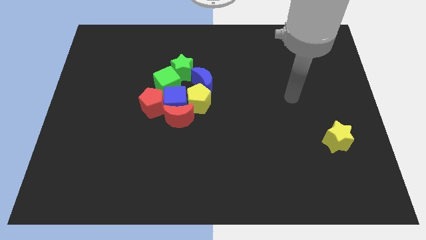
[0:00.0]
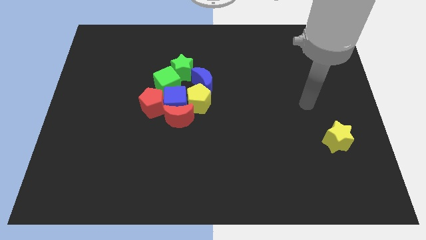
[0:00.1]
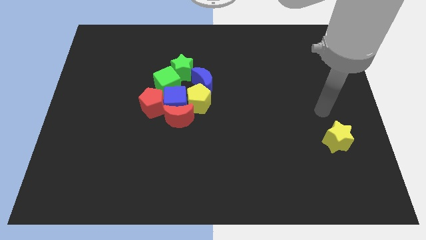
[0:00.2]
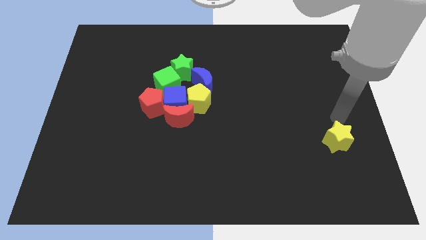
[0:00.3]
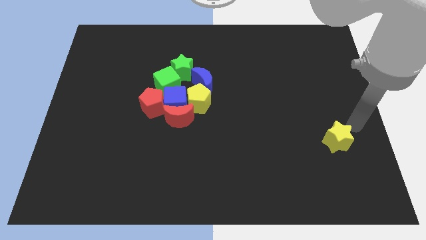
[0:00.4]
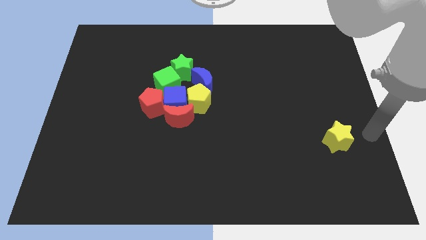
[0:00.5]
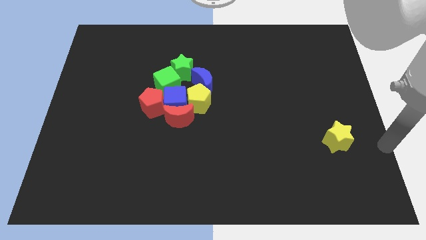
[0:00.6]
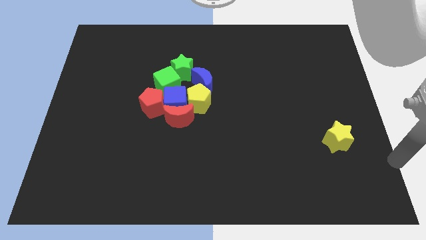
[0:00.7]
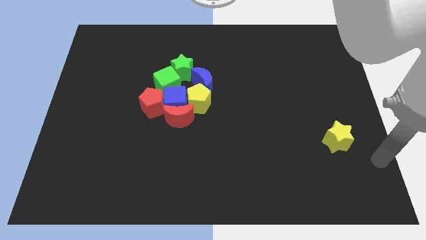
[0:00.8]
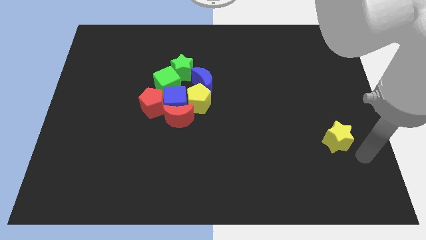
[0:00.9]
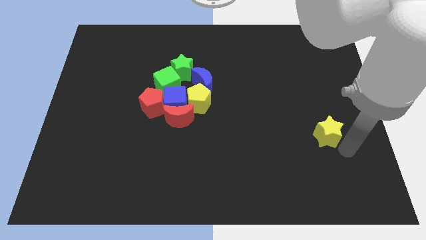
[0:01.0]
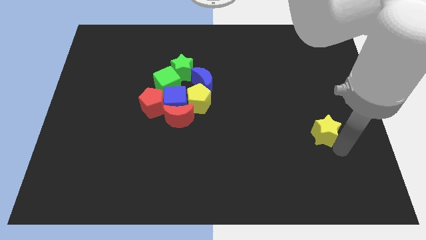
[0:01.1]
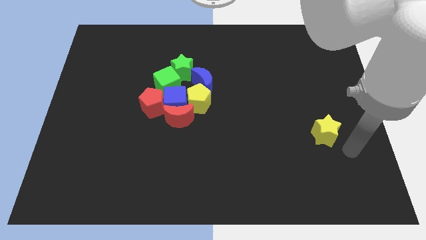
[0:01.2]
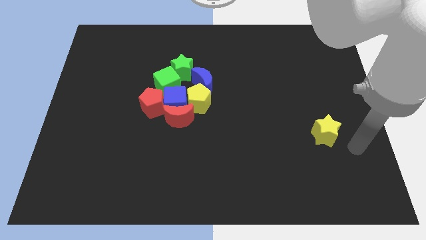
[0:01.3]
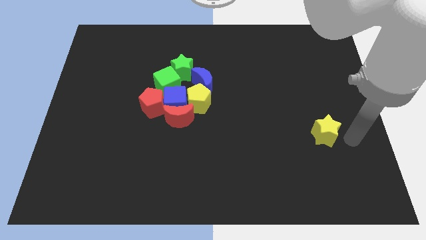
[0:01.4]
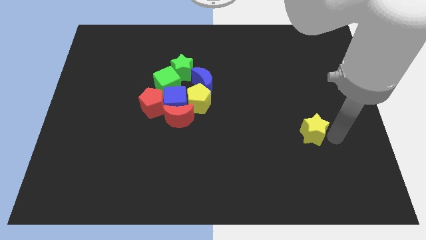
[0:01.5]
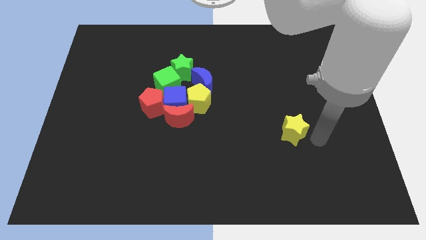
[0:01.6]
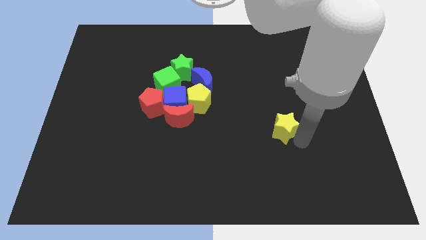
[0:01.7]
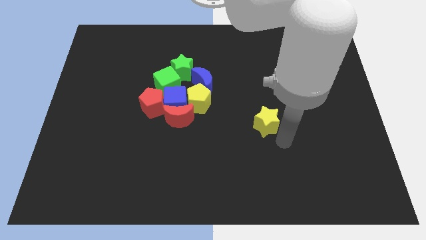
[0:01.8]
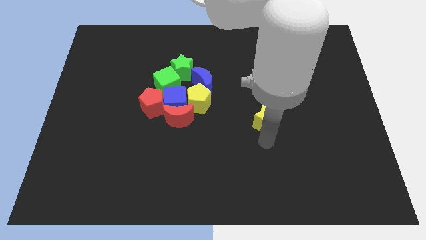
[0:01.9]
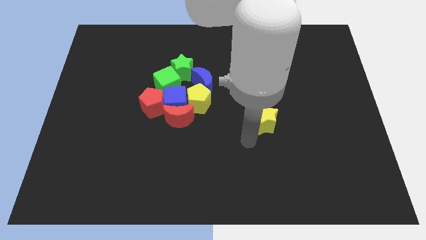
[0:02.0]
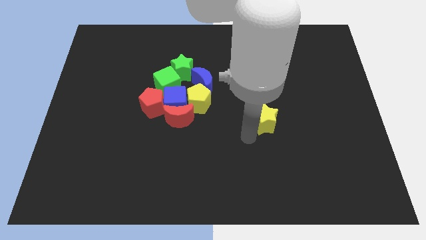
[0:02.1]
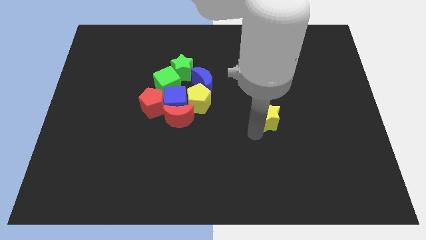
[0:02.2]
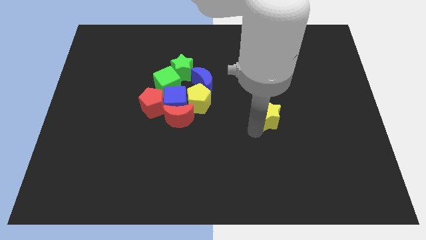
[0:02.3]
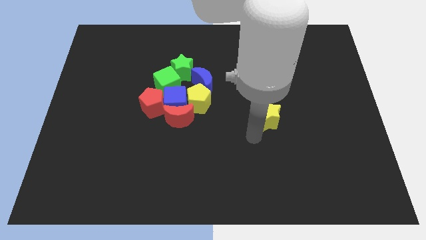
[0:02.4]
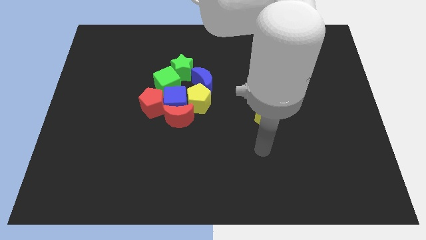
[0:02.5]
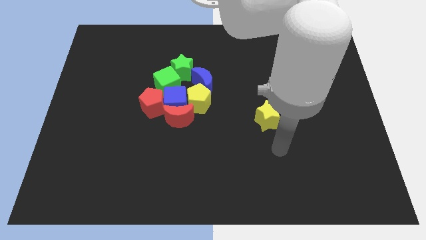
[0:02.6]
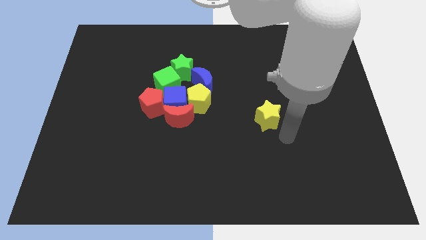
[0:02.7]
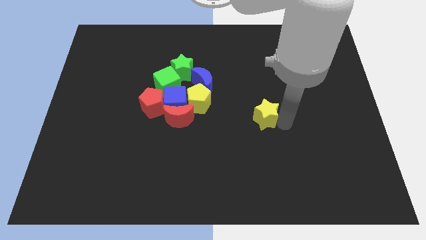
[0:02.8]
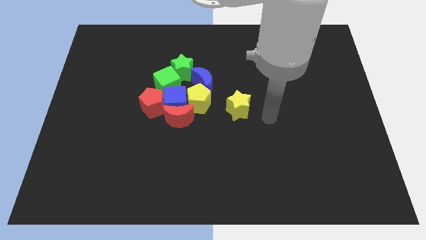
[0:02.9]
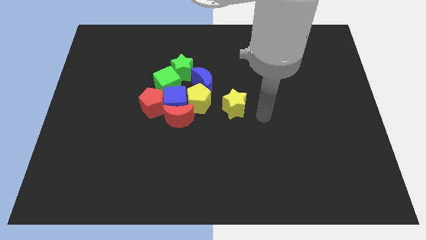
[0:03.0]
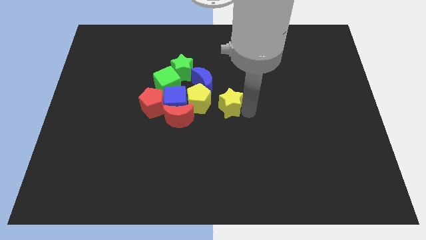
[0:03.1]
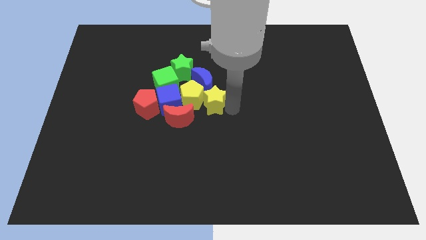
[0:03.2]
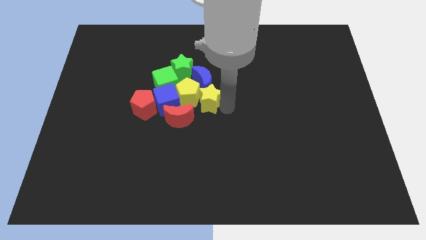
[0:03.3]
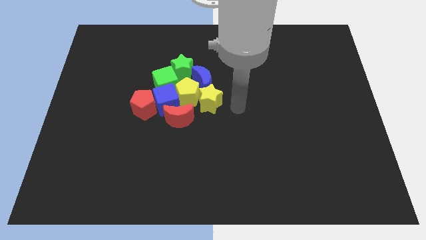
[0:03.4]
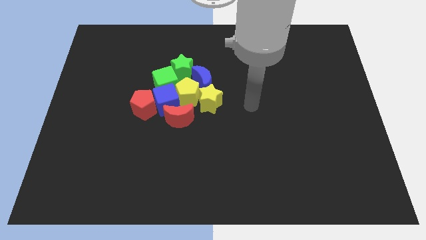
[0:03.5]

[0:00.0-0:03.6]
place yellow star close to yellow pentagon

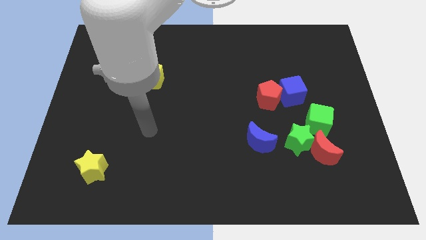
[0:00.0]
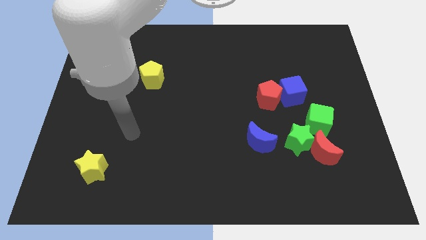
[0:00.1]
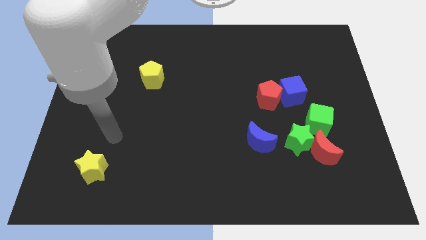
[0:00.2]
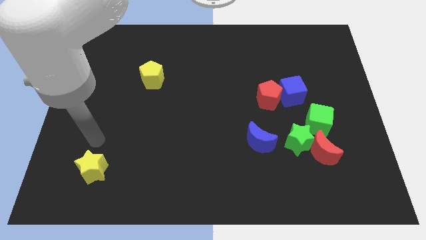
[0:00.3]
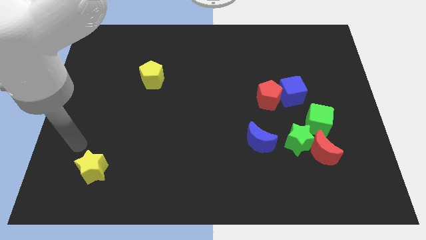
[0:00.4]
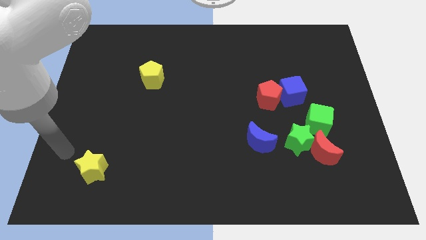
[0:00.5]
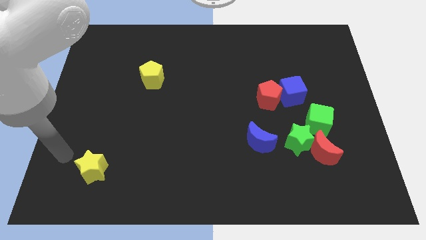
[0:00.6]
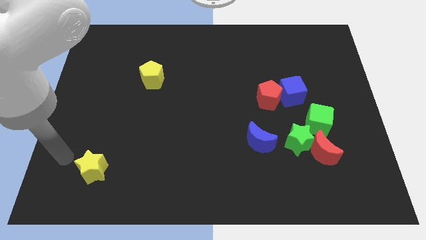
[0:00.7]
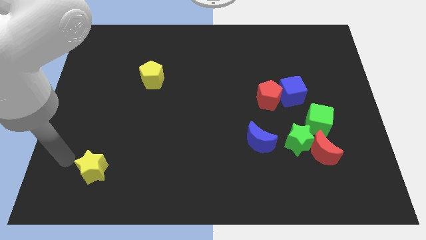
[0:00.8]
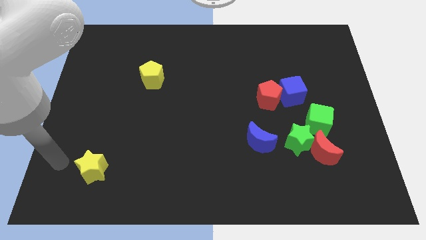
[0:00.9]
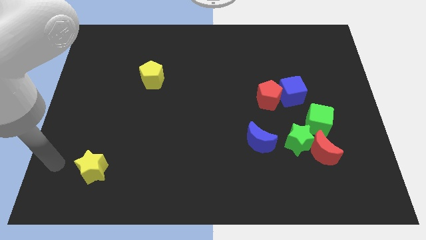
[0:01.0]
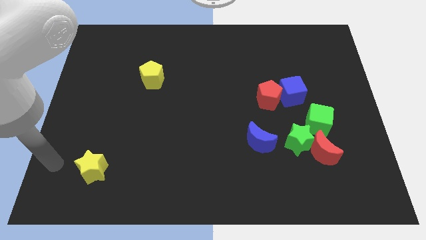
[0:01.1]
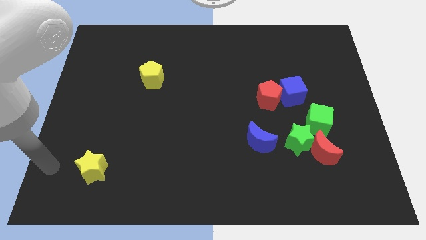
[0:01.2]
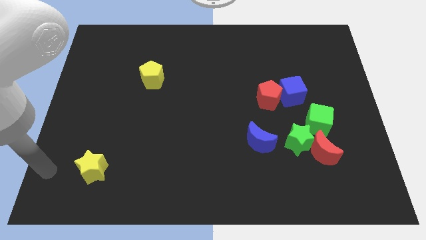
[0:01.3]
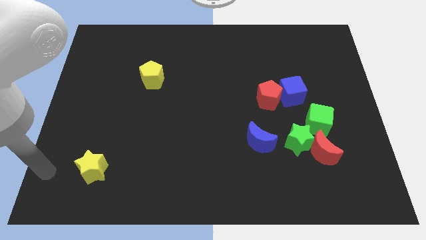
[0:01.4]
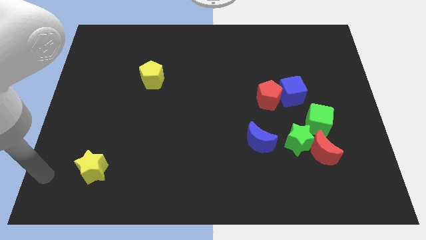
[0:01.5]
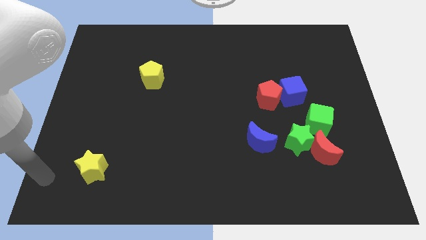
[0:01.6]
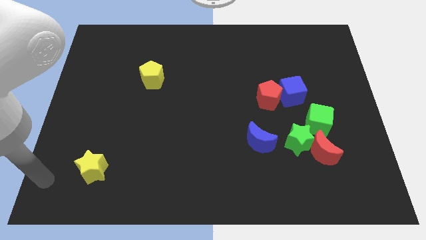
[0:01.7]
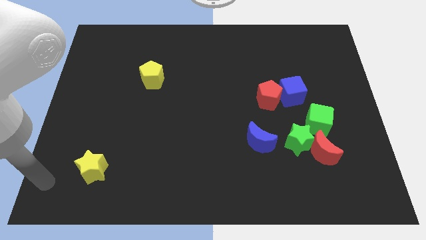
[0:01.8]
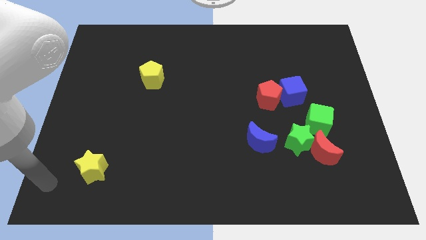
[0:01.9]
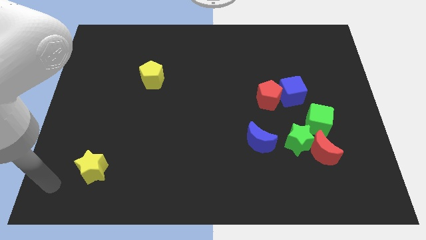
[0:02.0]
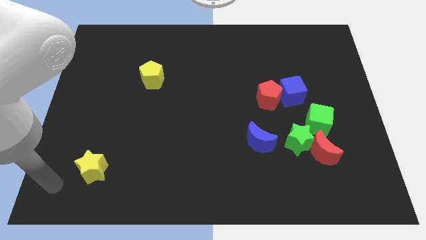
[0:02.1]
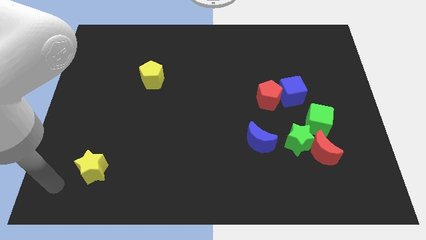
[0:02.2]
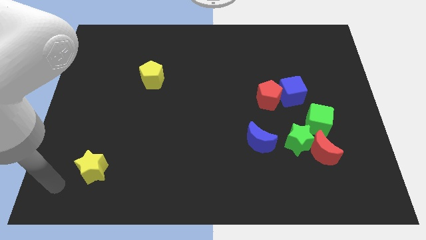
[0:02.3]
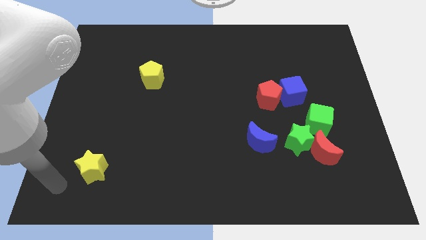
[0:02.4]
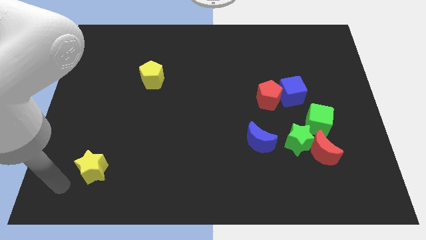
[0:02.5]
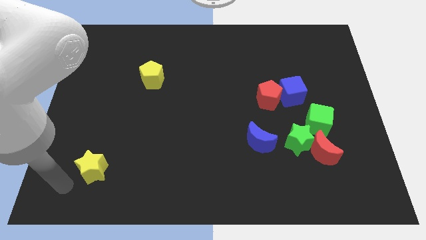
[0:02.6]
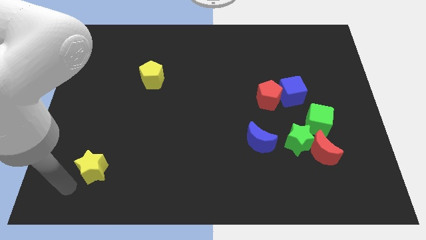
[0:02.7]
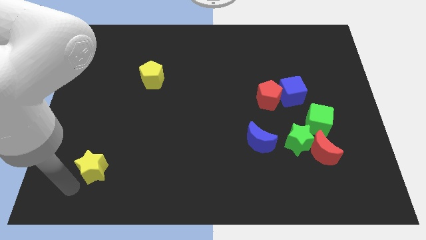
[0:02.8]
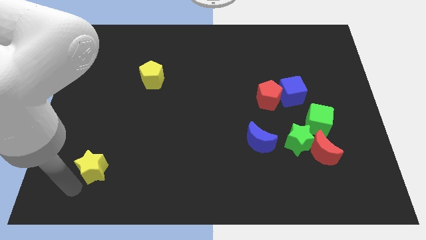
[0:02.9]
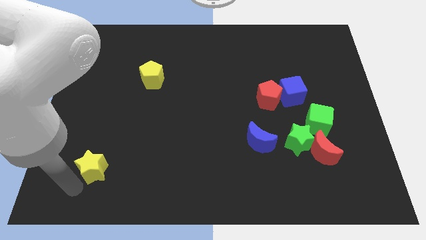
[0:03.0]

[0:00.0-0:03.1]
place your arm at the bottom left of the yellow star

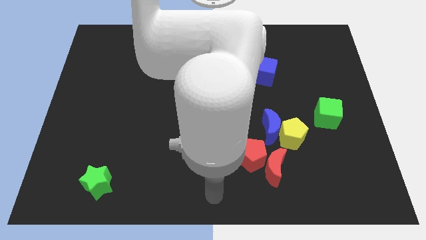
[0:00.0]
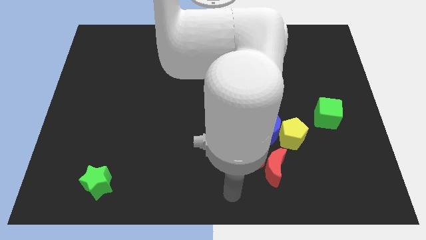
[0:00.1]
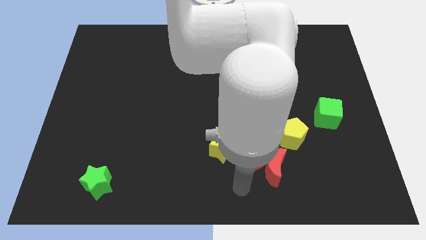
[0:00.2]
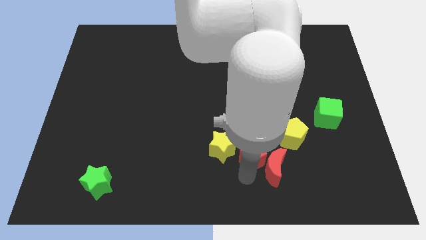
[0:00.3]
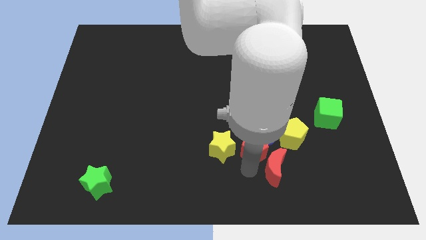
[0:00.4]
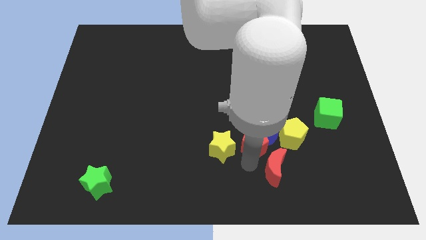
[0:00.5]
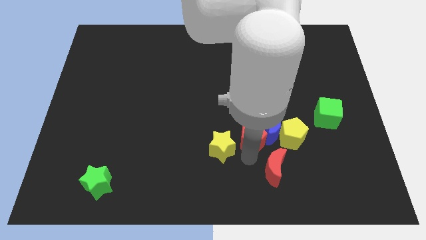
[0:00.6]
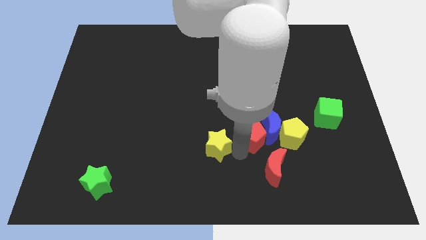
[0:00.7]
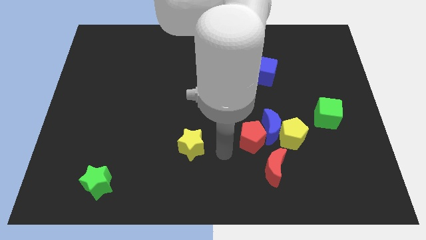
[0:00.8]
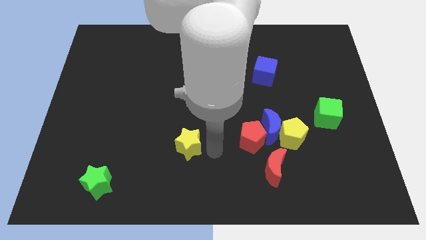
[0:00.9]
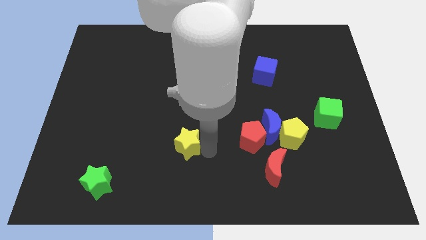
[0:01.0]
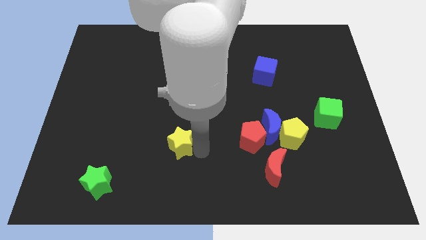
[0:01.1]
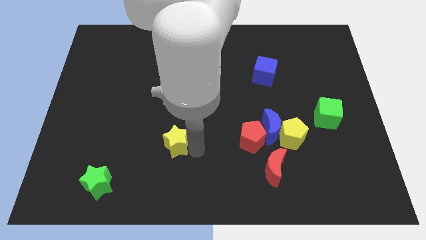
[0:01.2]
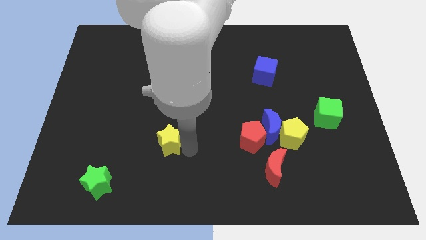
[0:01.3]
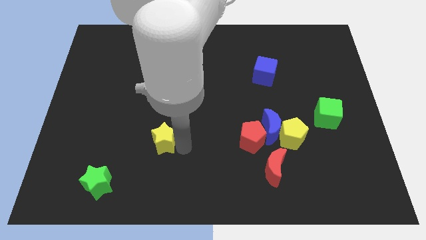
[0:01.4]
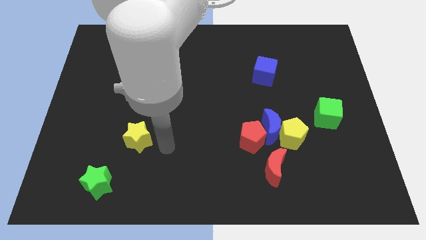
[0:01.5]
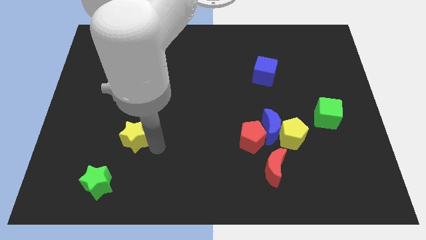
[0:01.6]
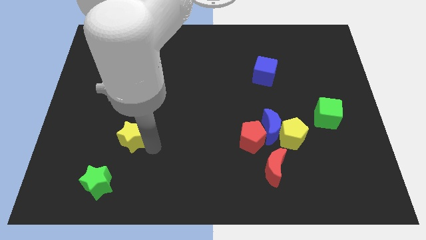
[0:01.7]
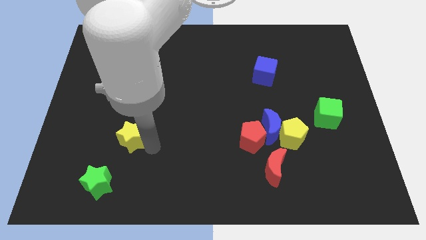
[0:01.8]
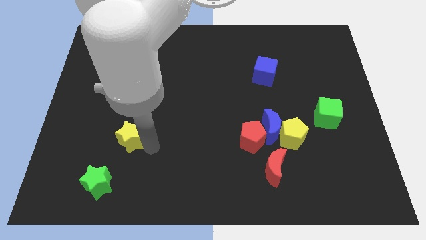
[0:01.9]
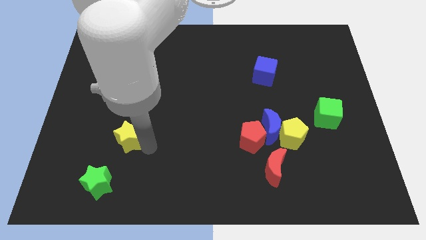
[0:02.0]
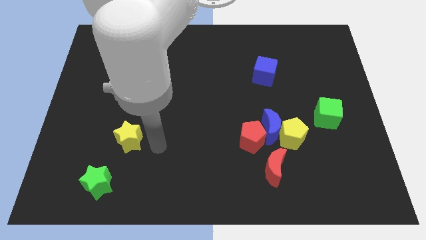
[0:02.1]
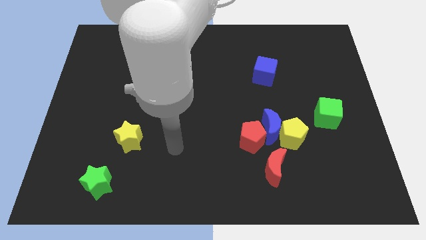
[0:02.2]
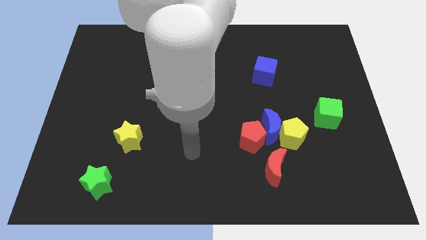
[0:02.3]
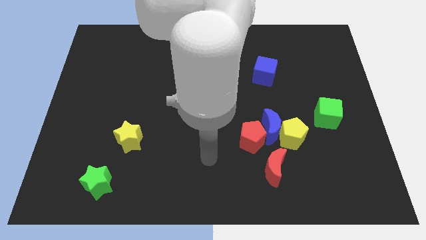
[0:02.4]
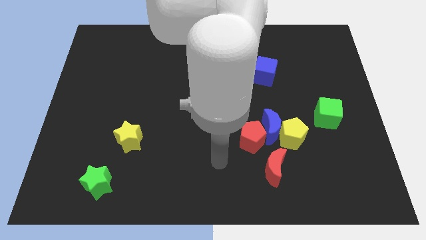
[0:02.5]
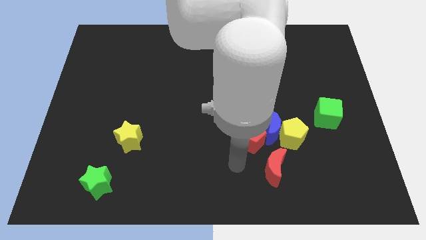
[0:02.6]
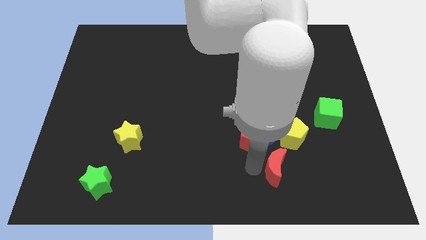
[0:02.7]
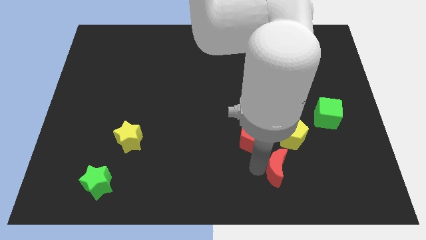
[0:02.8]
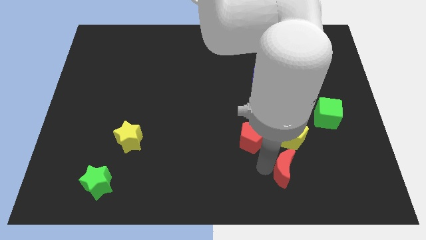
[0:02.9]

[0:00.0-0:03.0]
move the red pentagon slightly upwards
